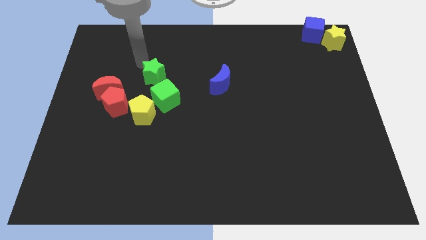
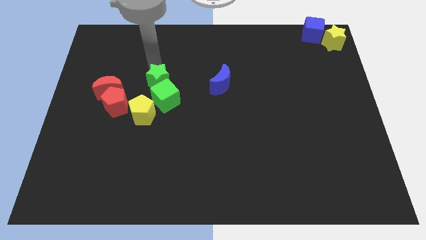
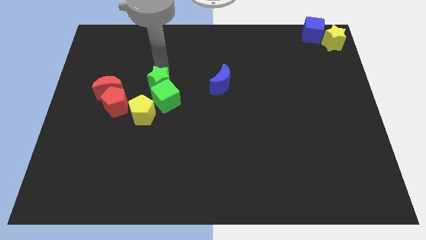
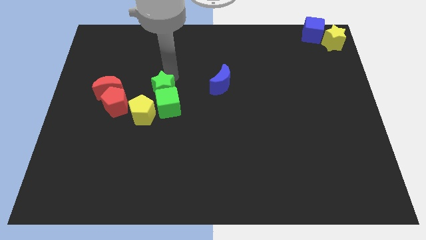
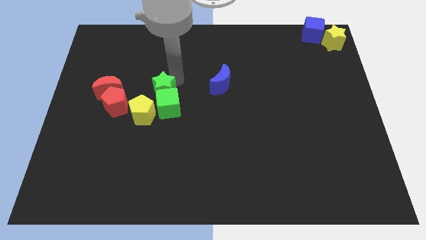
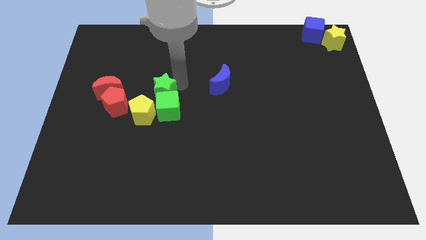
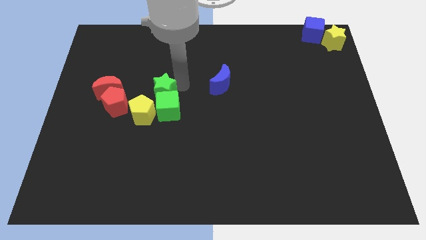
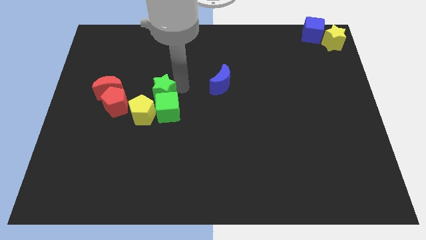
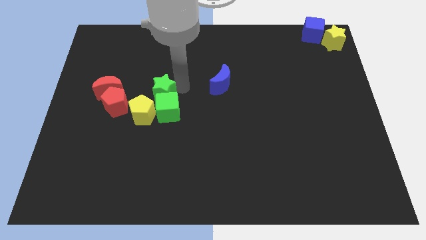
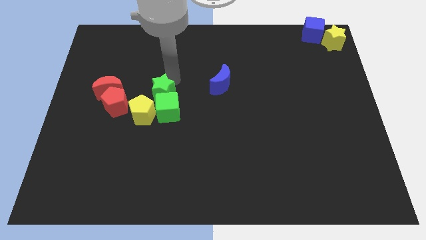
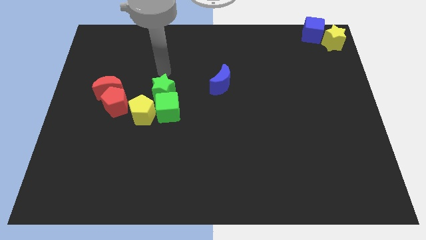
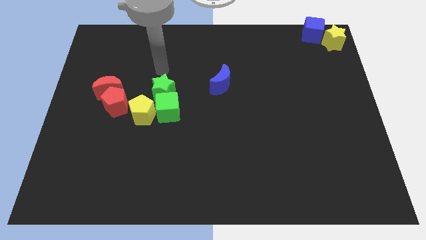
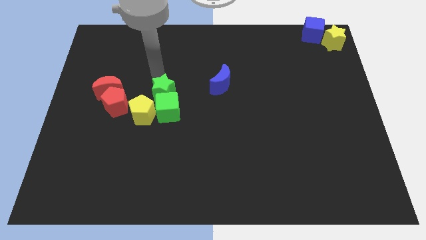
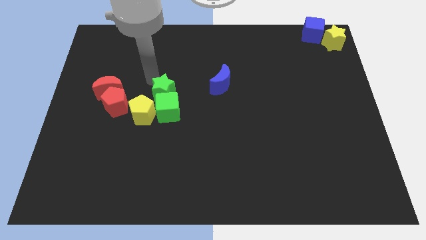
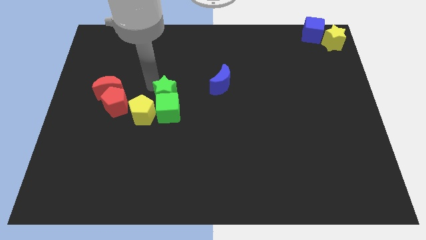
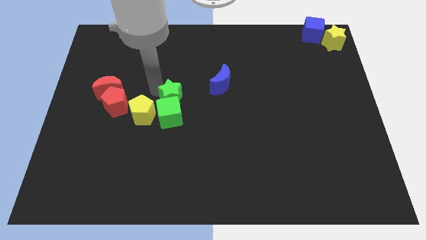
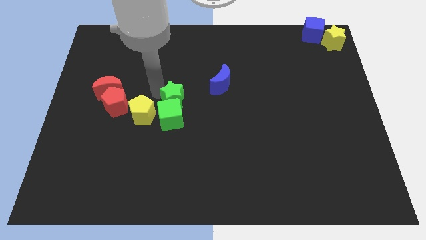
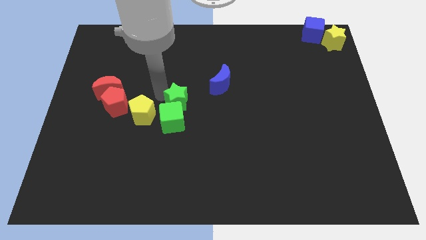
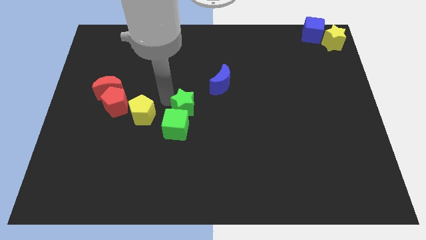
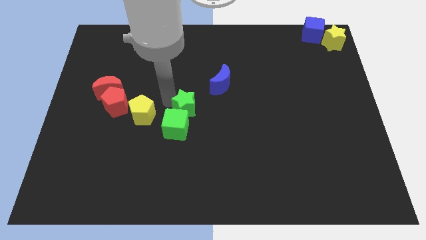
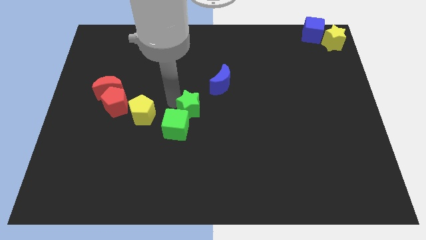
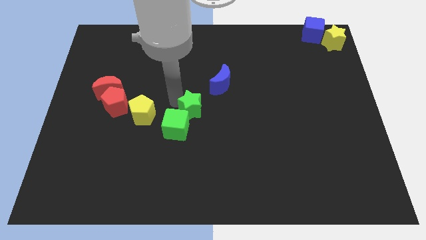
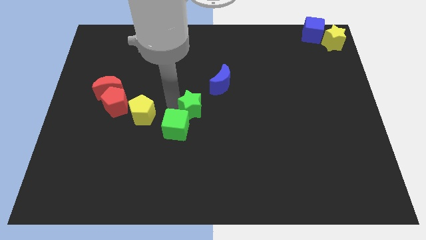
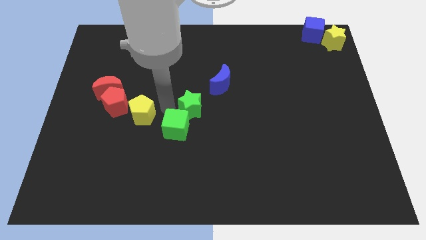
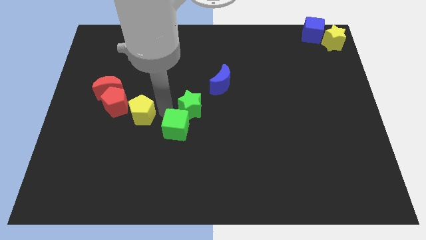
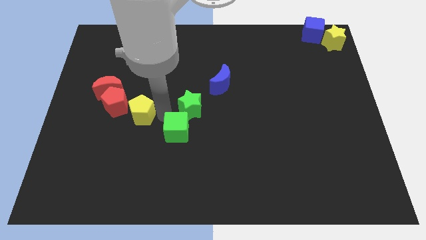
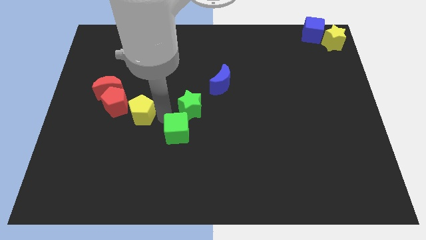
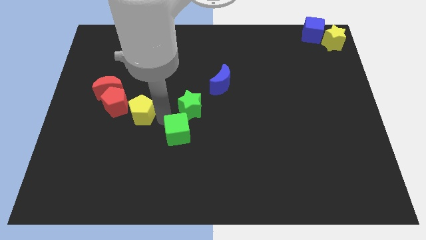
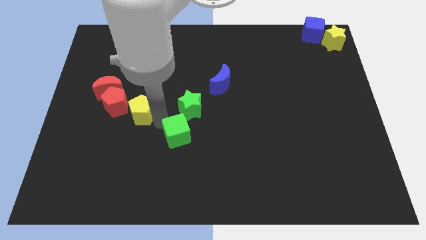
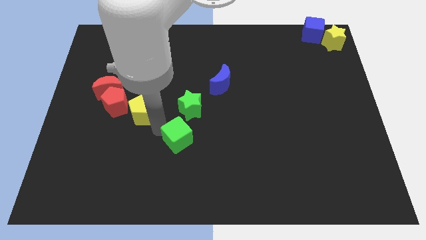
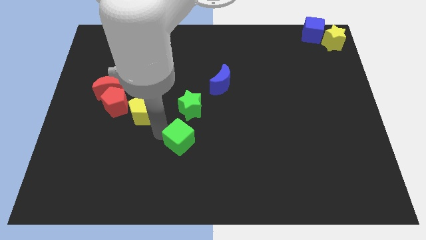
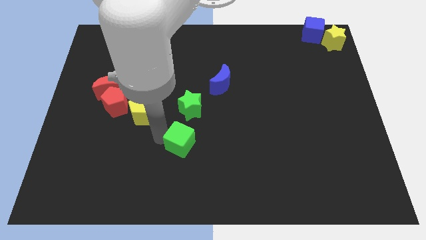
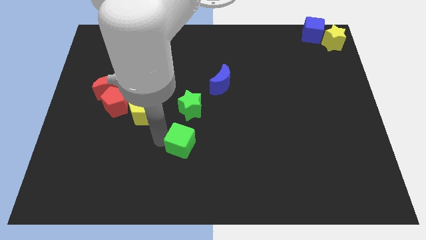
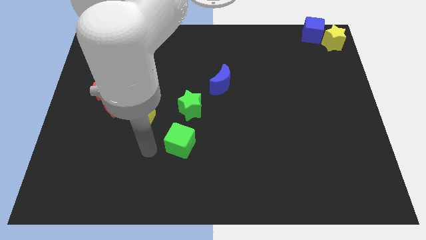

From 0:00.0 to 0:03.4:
move the green cube to the bottom side of the green star

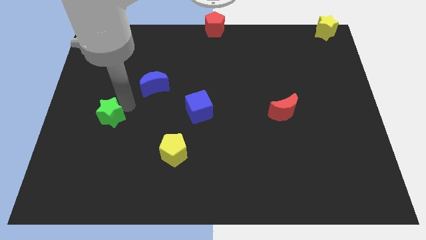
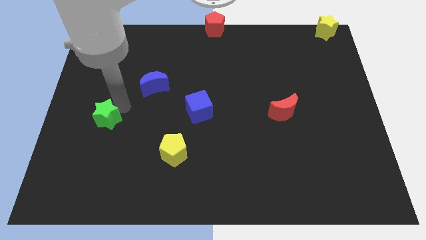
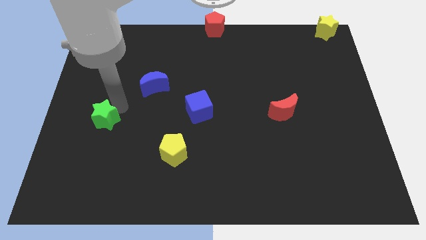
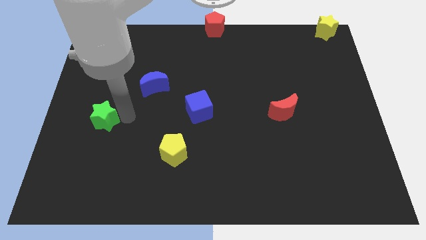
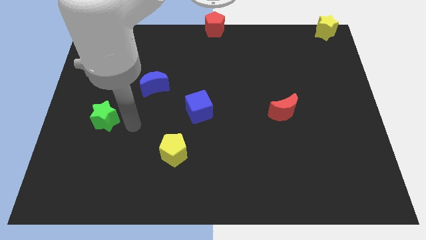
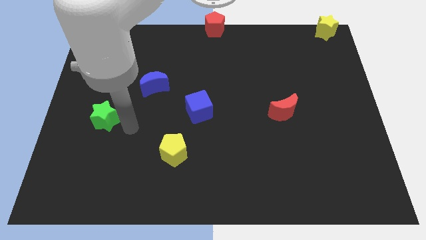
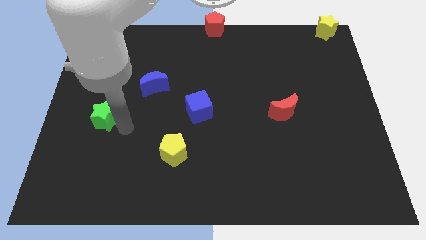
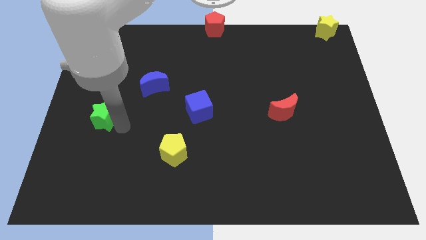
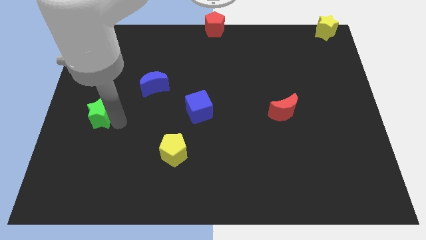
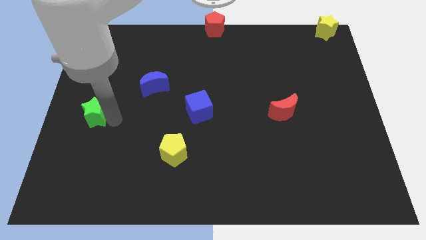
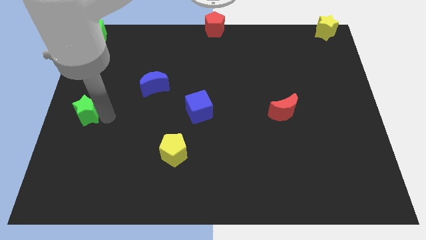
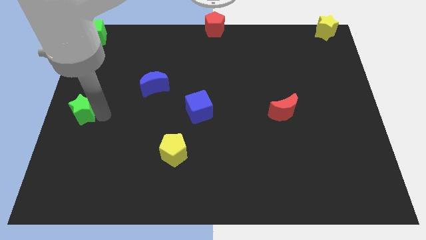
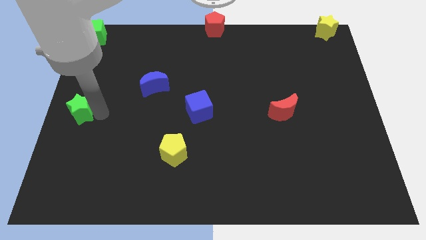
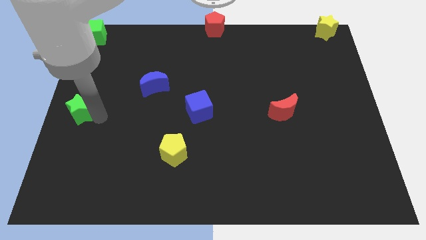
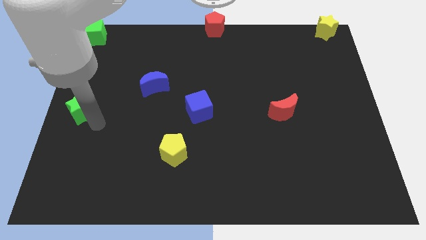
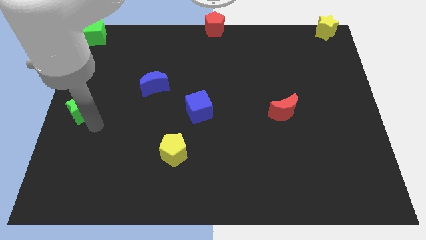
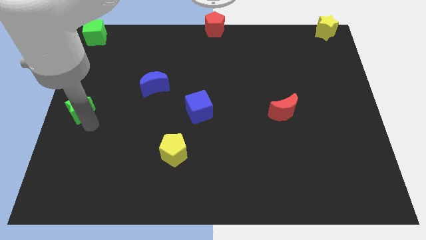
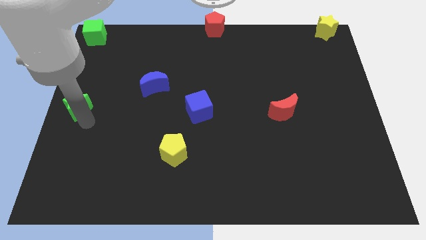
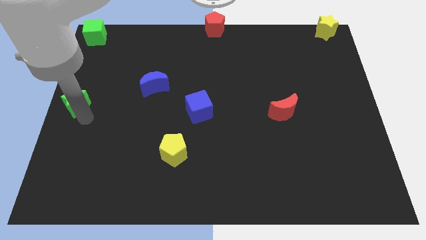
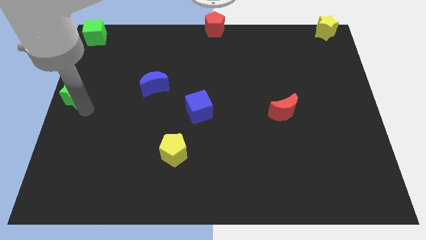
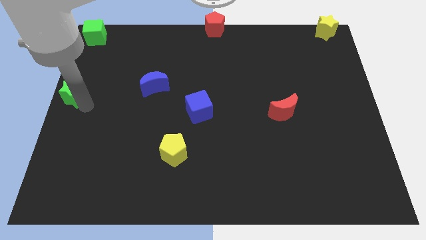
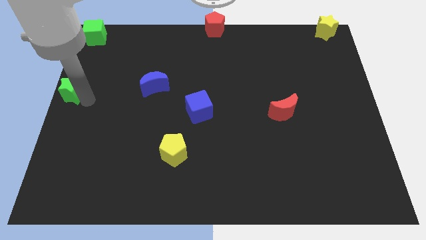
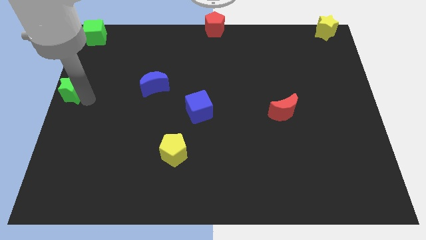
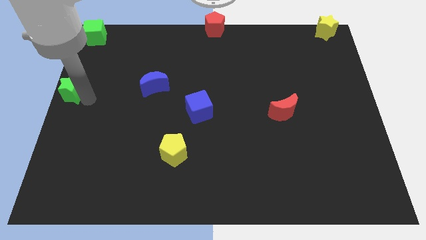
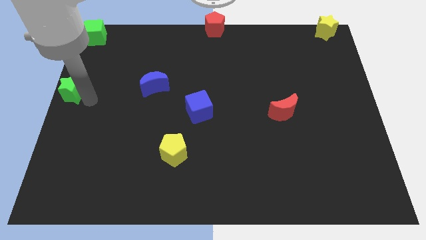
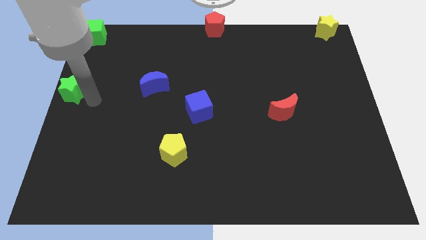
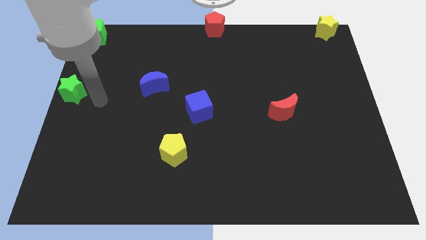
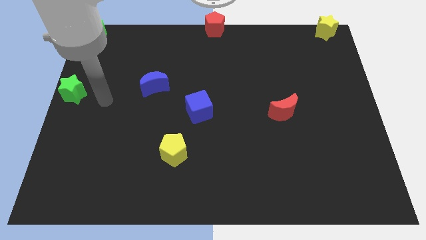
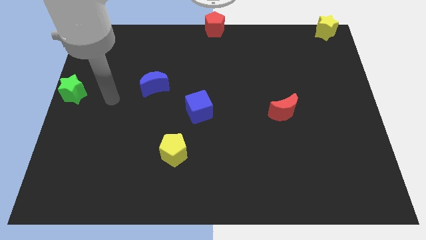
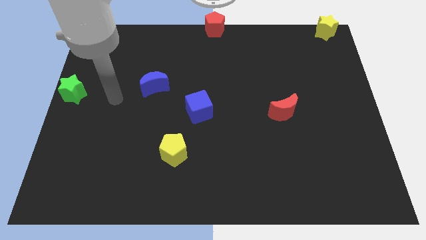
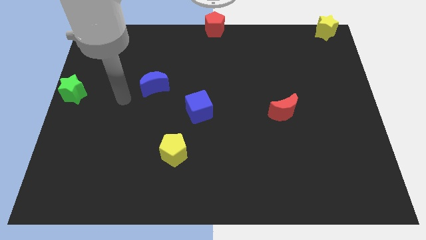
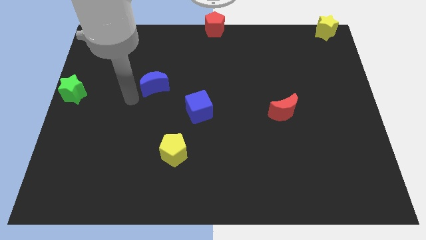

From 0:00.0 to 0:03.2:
place the green star vertically below the green cube

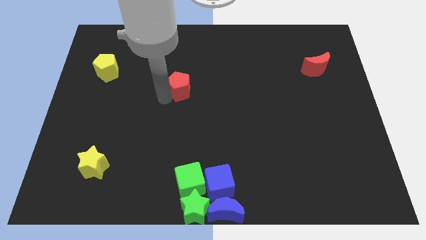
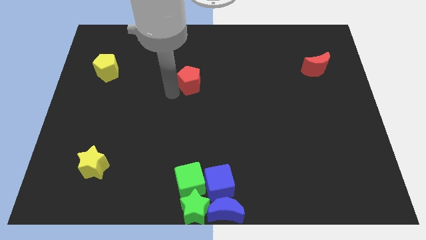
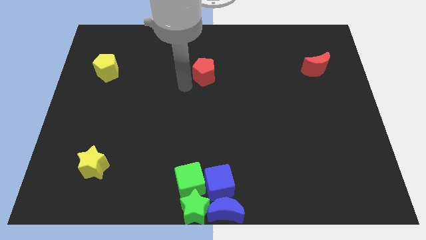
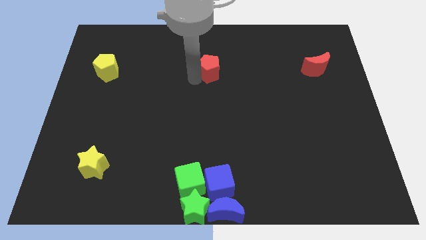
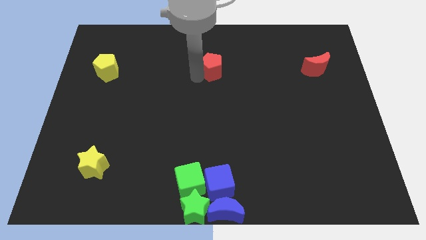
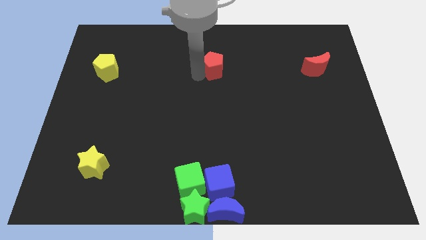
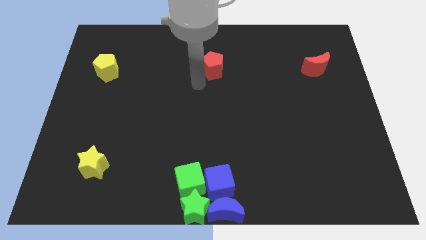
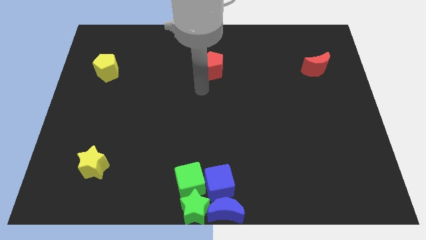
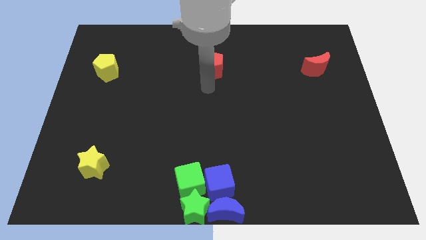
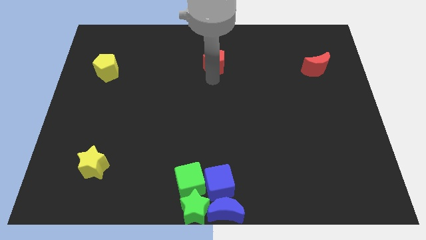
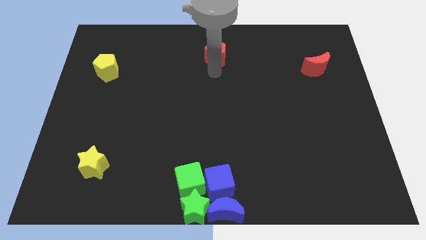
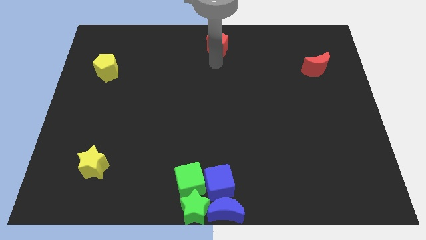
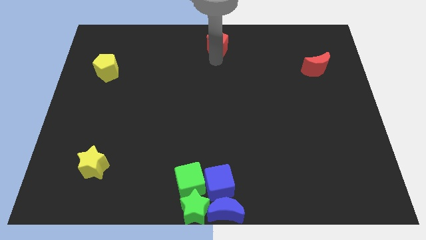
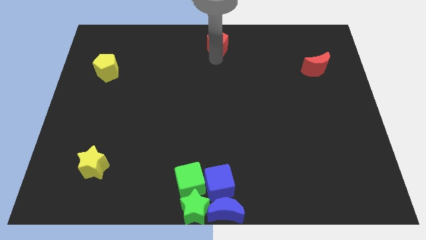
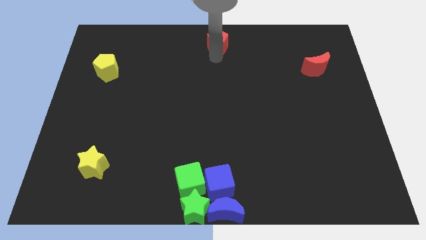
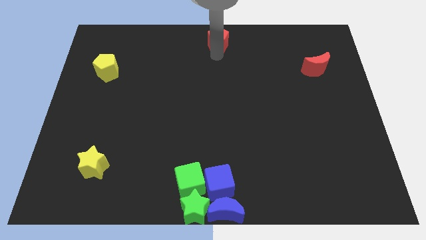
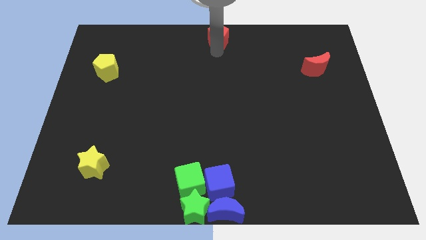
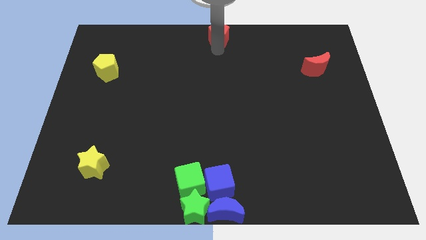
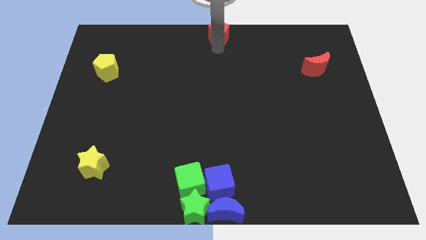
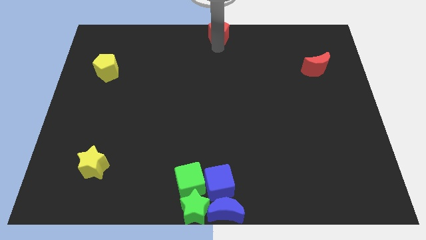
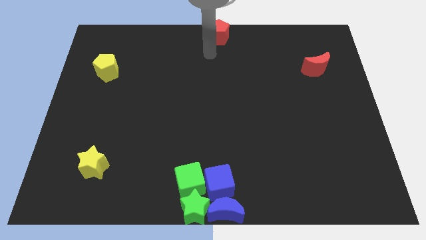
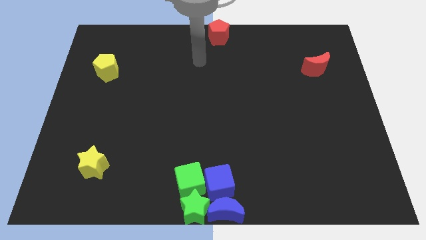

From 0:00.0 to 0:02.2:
place the red pentagon above the group of green and blue blocks

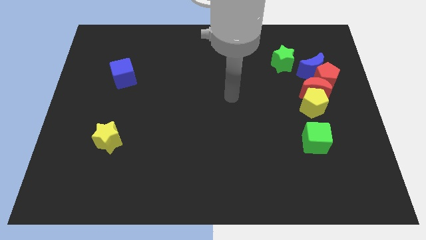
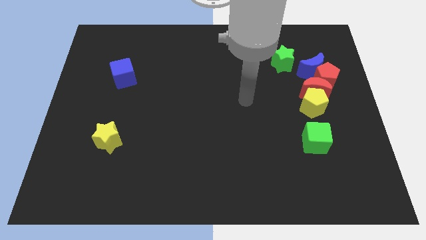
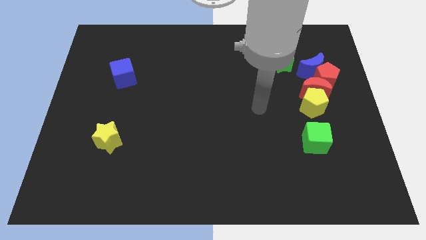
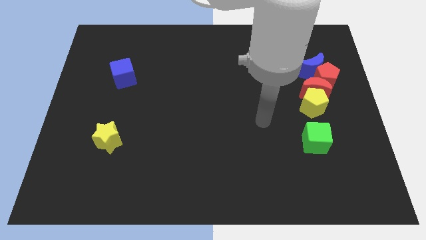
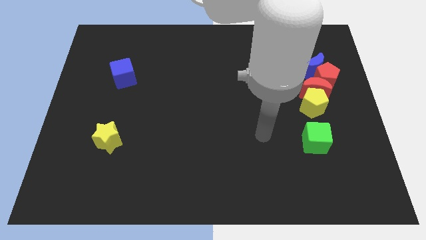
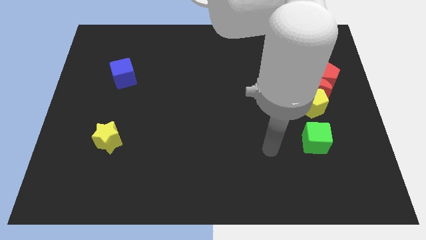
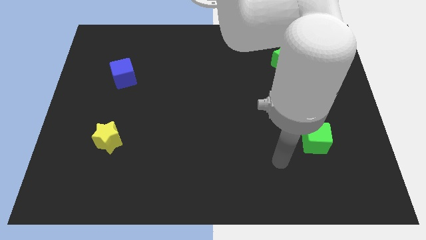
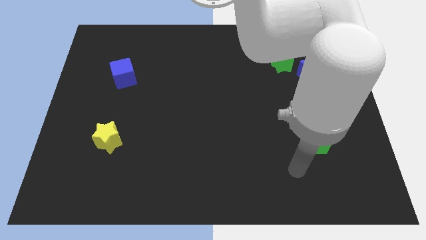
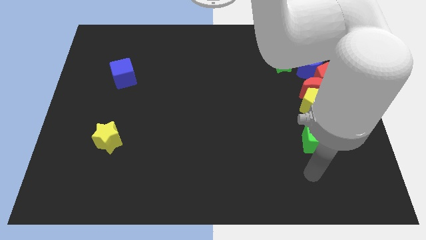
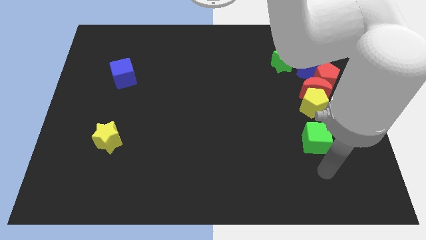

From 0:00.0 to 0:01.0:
go near the green cube
